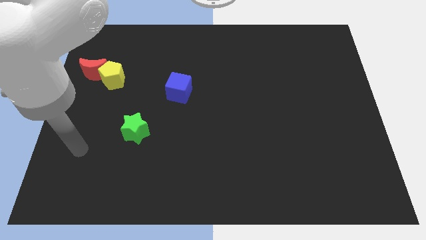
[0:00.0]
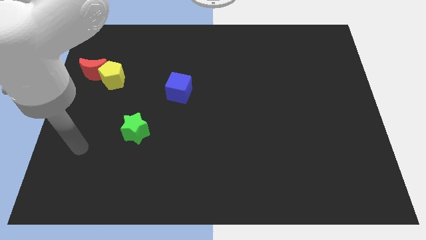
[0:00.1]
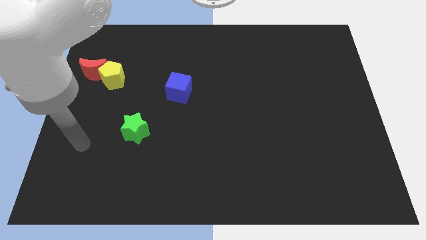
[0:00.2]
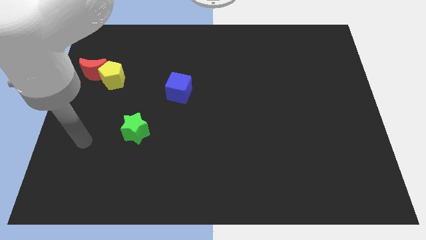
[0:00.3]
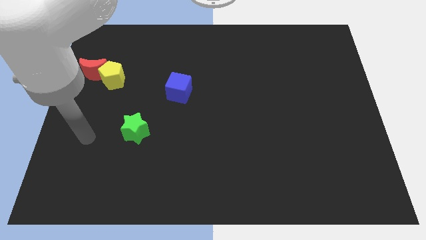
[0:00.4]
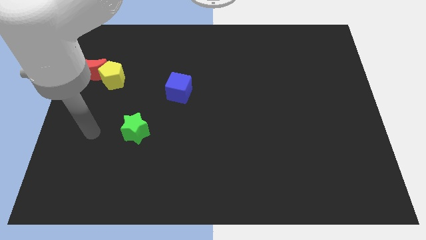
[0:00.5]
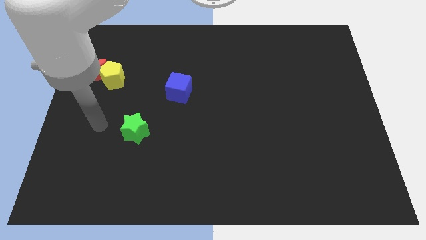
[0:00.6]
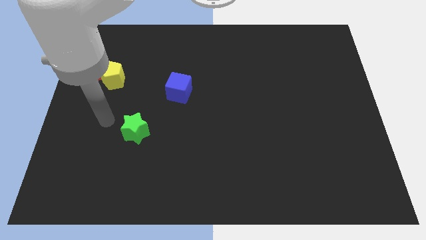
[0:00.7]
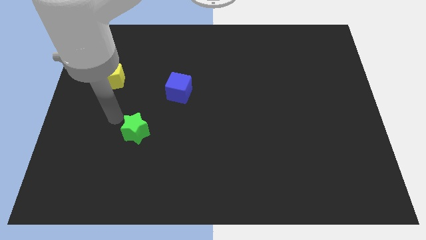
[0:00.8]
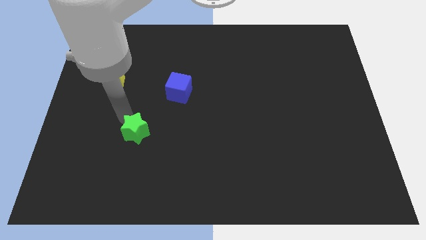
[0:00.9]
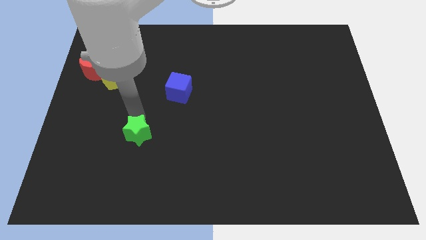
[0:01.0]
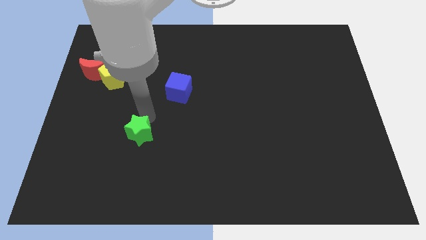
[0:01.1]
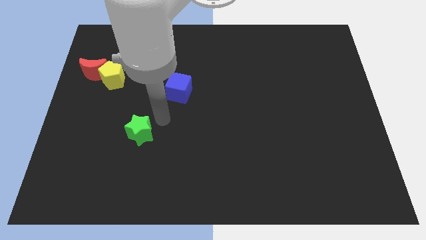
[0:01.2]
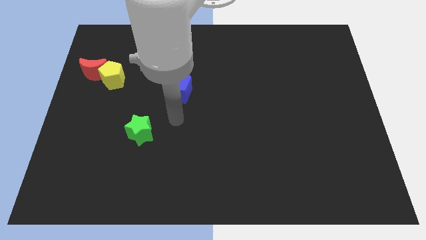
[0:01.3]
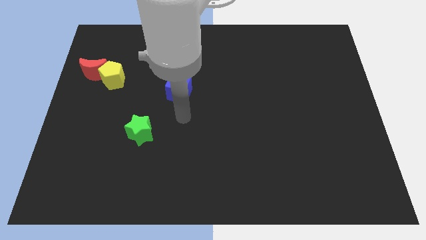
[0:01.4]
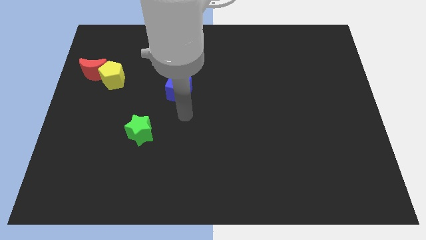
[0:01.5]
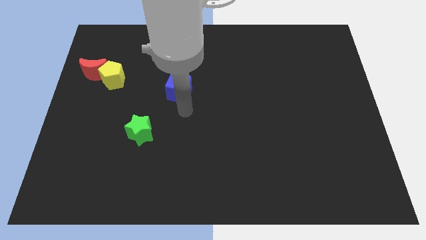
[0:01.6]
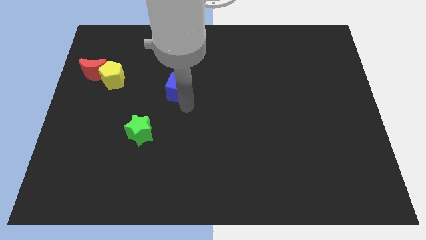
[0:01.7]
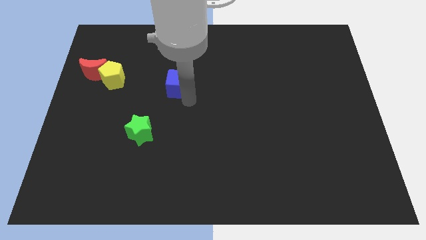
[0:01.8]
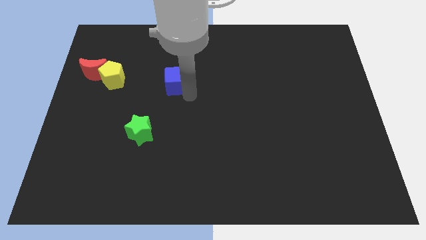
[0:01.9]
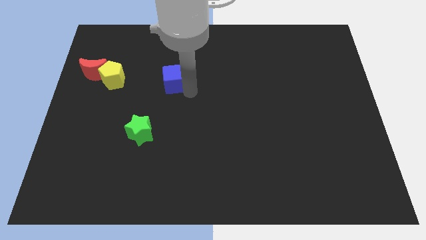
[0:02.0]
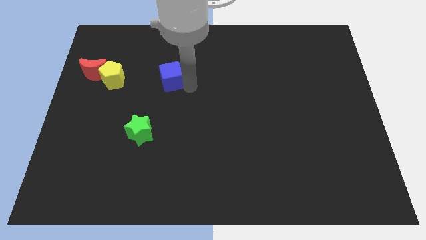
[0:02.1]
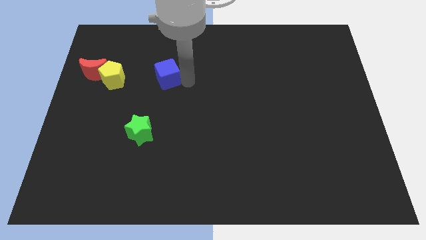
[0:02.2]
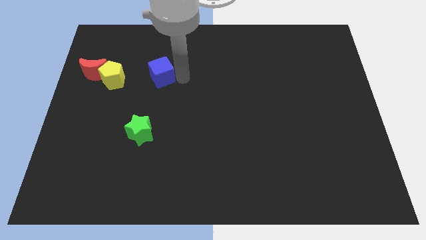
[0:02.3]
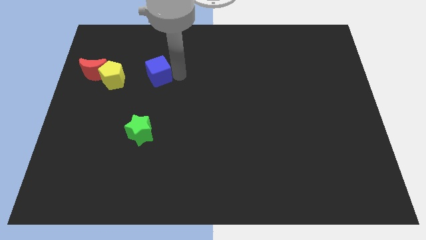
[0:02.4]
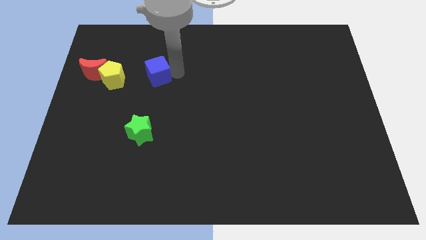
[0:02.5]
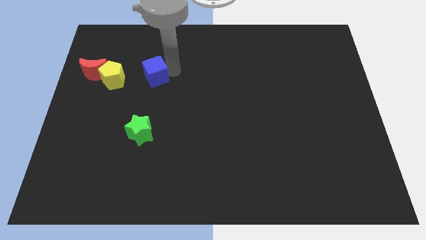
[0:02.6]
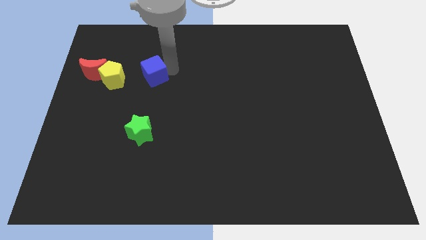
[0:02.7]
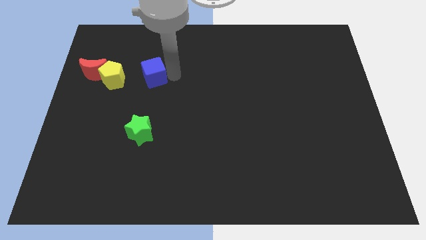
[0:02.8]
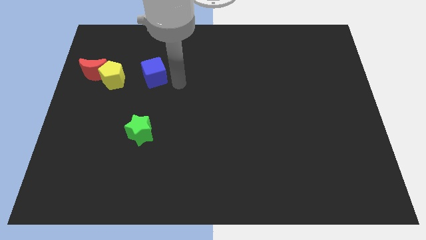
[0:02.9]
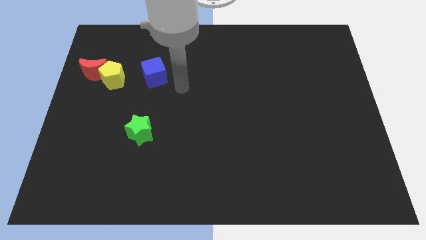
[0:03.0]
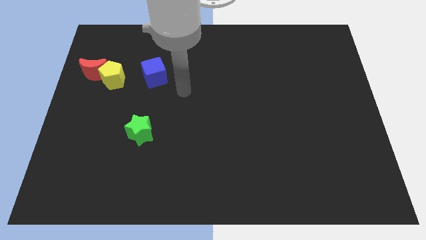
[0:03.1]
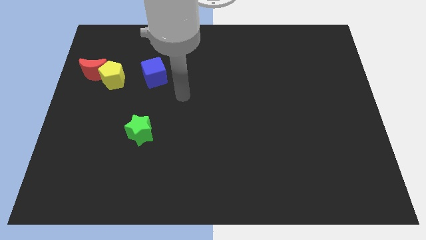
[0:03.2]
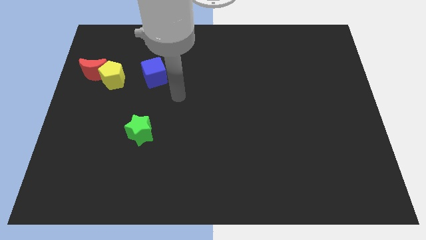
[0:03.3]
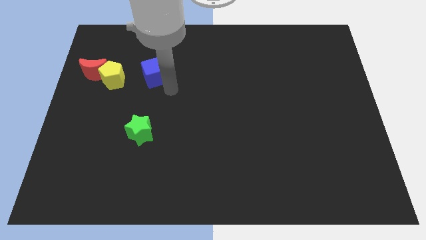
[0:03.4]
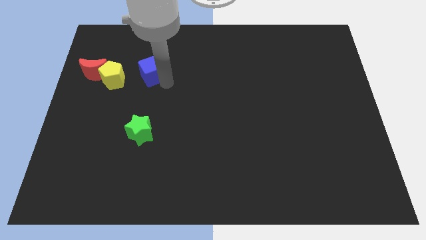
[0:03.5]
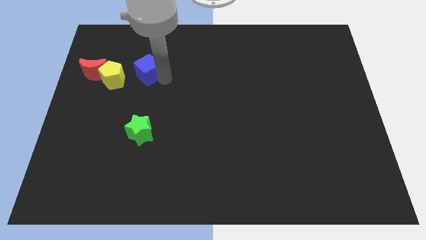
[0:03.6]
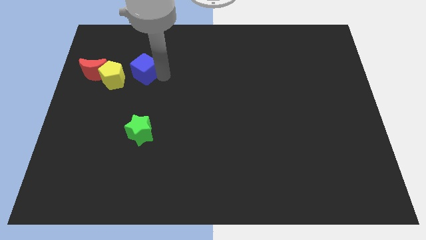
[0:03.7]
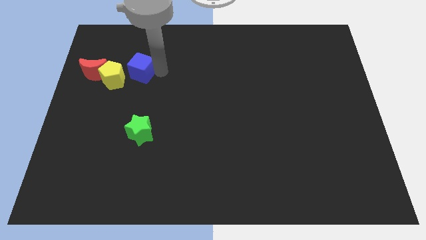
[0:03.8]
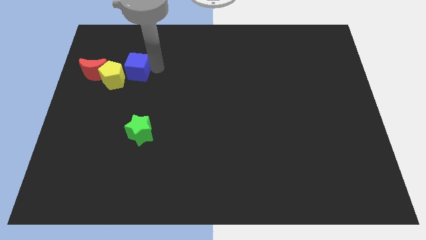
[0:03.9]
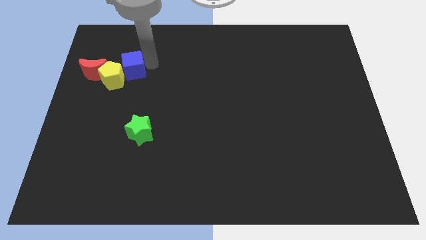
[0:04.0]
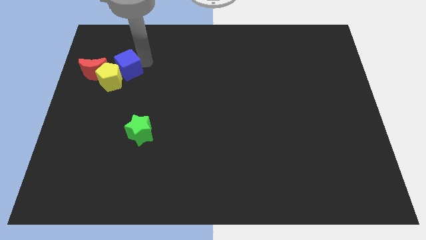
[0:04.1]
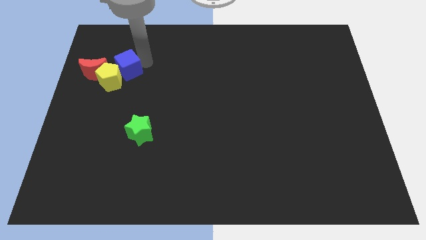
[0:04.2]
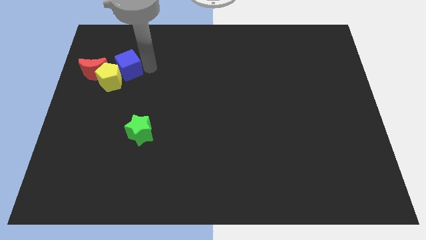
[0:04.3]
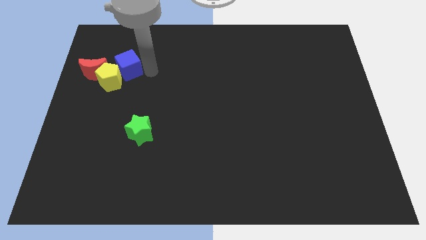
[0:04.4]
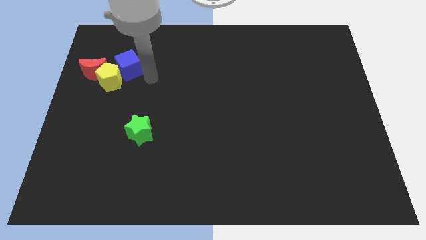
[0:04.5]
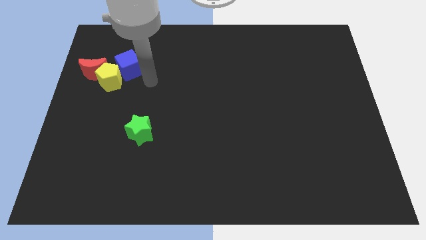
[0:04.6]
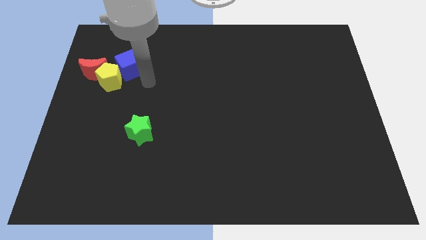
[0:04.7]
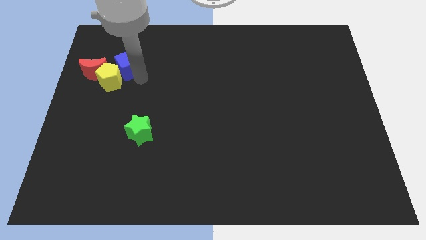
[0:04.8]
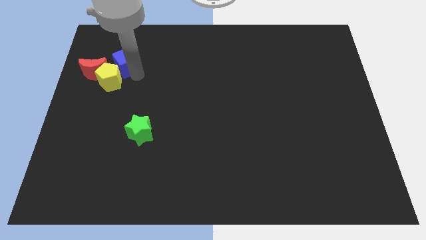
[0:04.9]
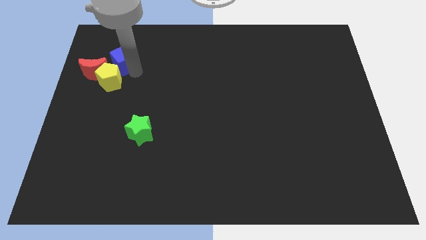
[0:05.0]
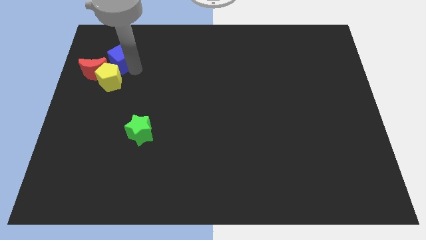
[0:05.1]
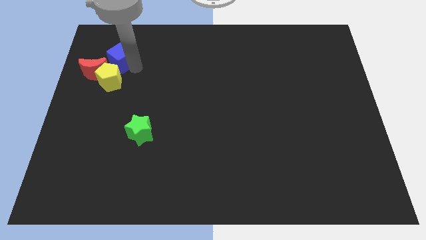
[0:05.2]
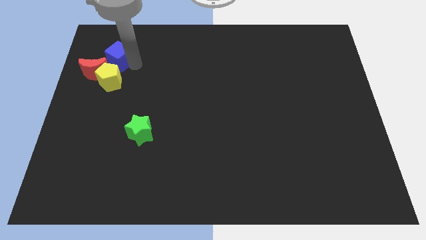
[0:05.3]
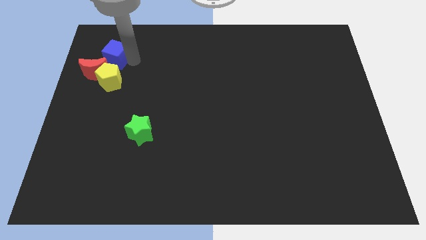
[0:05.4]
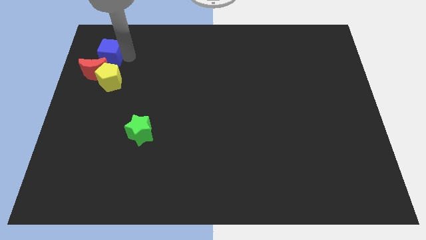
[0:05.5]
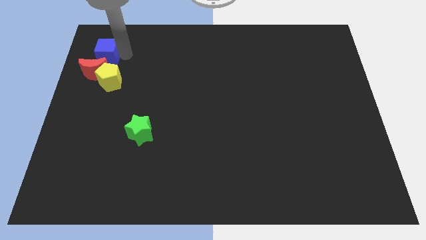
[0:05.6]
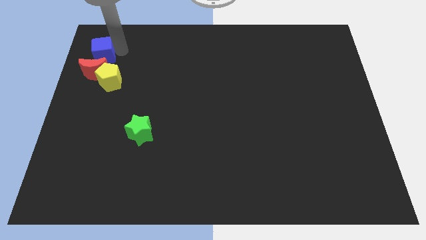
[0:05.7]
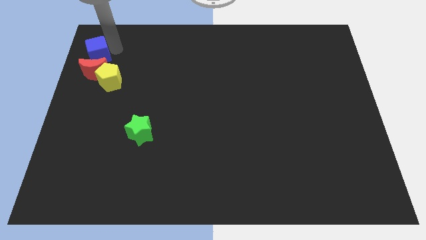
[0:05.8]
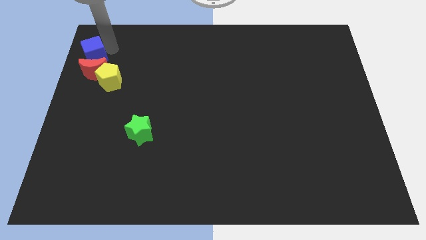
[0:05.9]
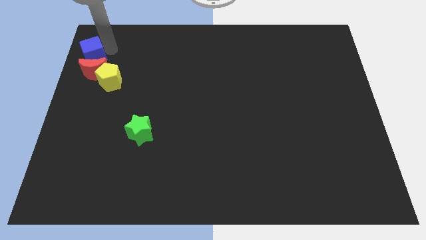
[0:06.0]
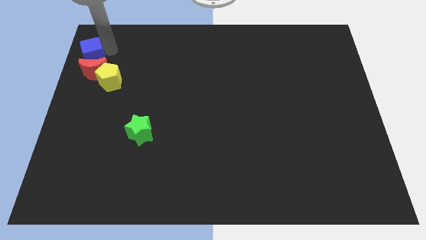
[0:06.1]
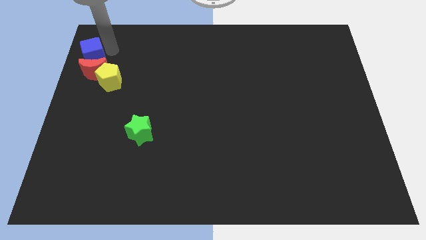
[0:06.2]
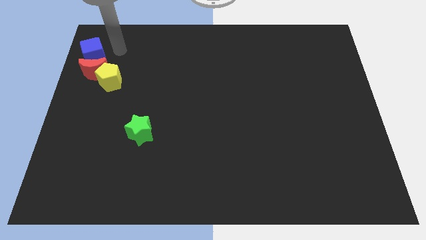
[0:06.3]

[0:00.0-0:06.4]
put the blue cube to the red block

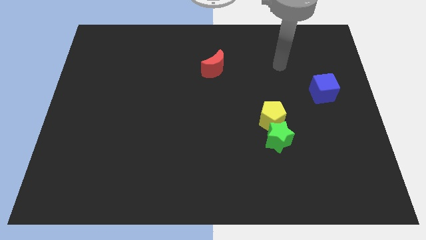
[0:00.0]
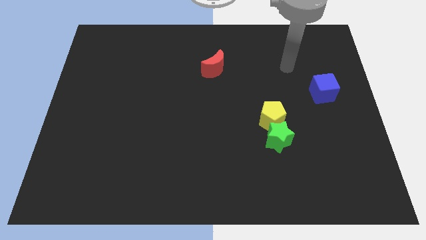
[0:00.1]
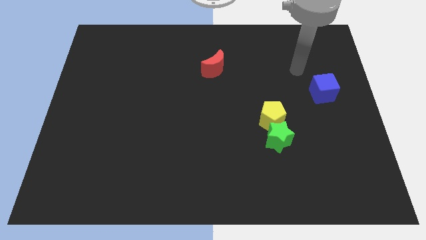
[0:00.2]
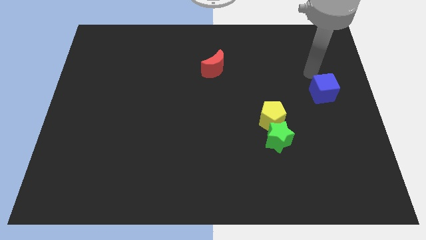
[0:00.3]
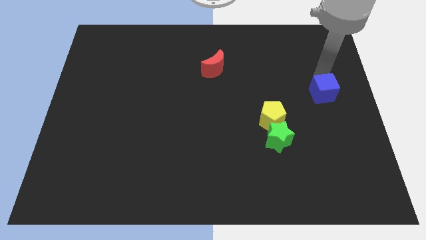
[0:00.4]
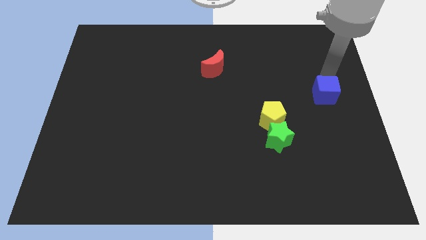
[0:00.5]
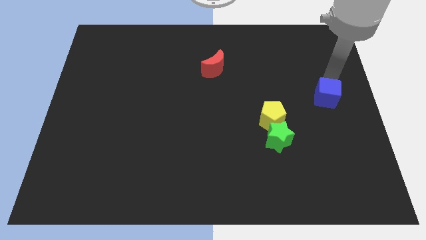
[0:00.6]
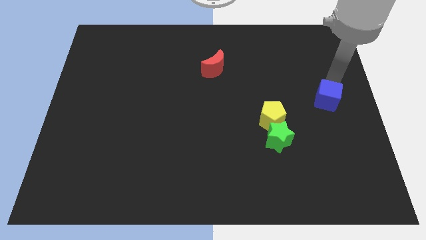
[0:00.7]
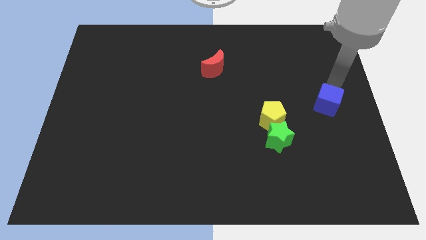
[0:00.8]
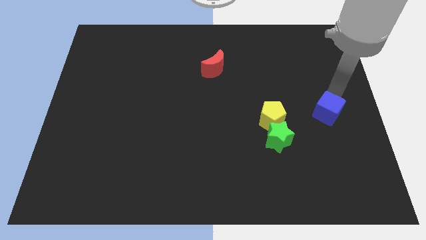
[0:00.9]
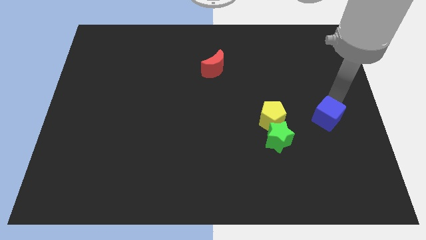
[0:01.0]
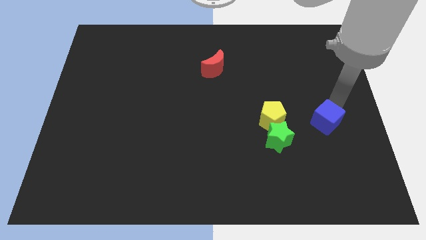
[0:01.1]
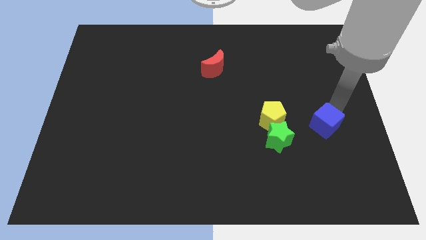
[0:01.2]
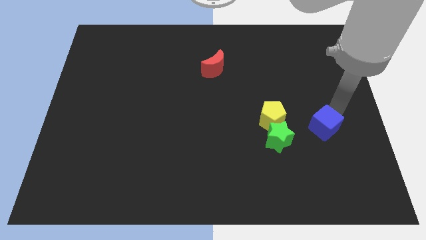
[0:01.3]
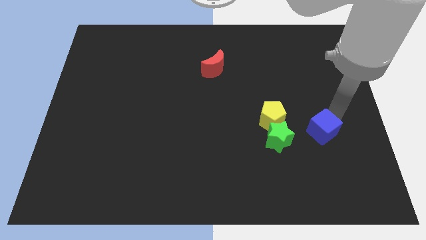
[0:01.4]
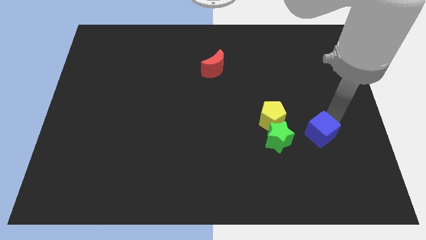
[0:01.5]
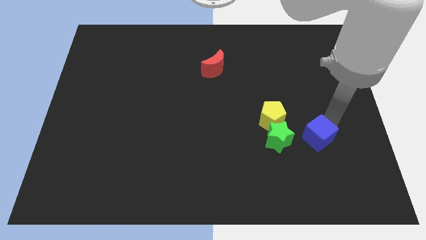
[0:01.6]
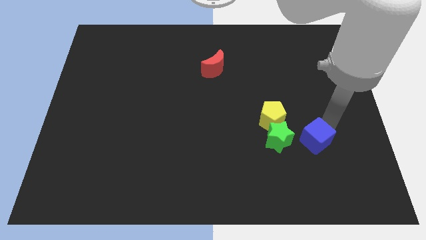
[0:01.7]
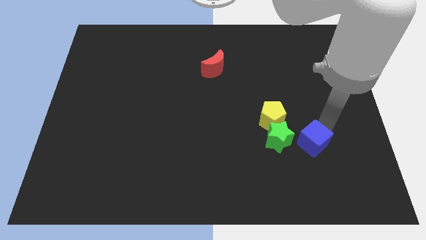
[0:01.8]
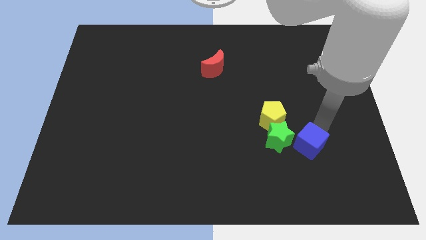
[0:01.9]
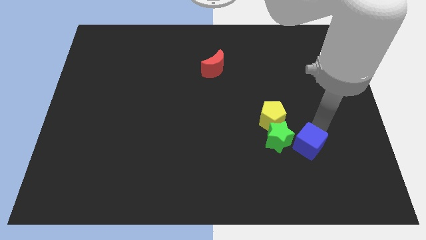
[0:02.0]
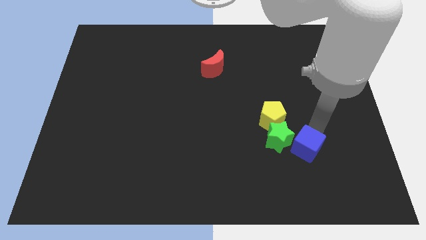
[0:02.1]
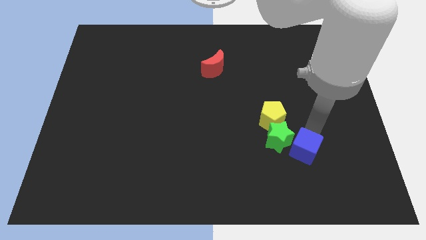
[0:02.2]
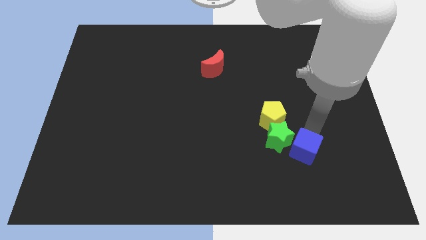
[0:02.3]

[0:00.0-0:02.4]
slide the blue cube to the green star
